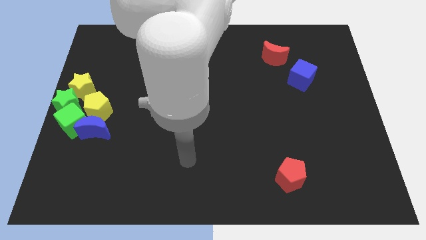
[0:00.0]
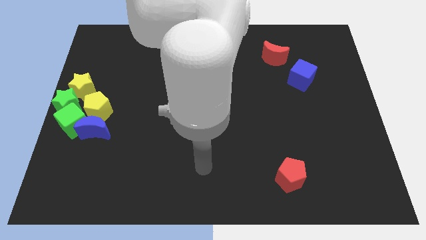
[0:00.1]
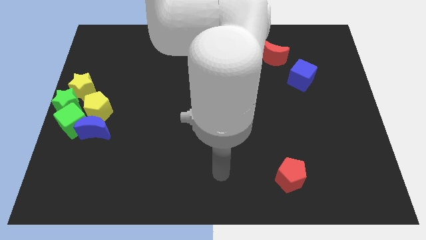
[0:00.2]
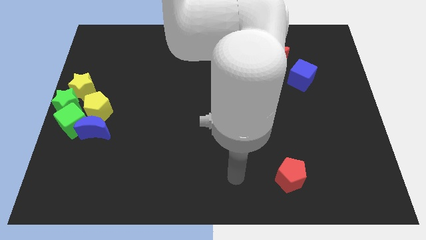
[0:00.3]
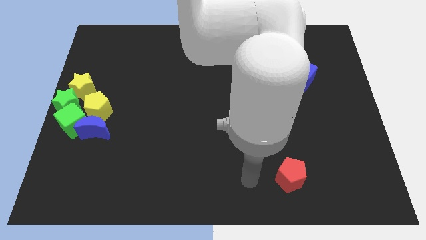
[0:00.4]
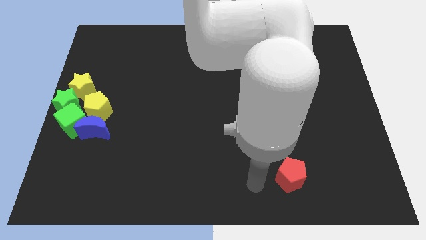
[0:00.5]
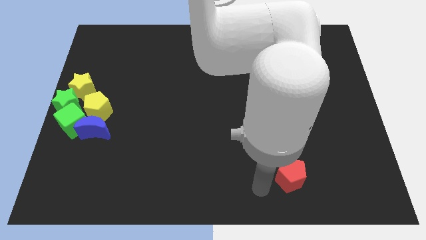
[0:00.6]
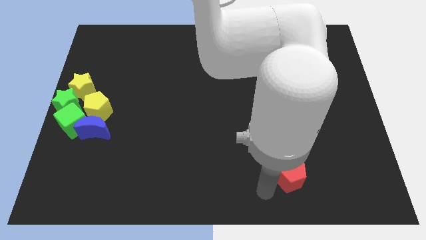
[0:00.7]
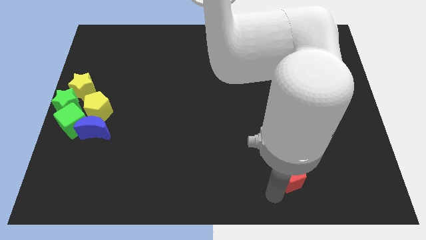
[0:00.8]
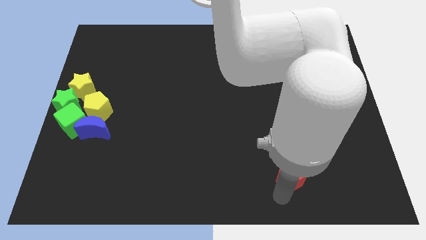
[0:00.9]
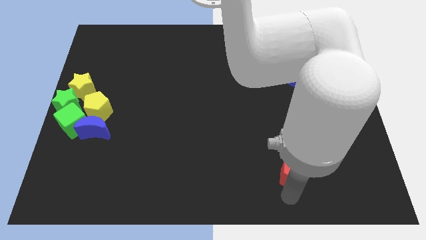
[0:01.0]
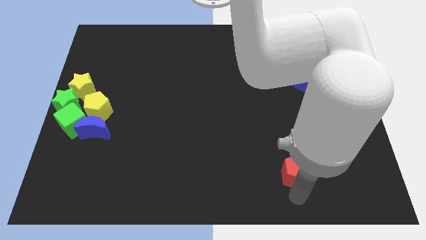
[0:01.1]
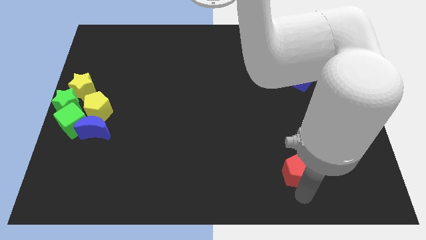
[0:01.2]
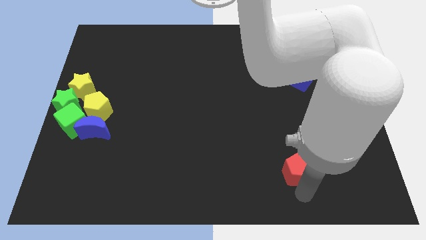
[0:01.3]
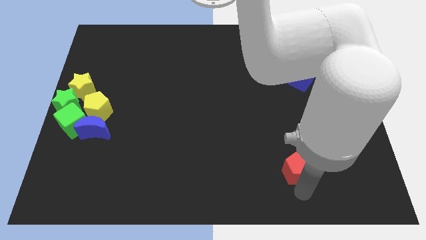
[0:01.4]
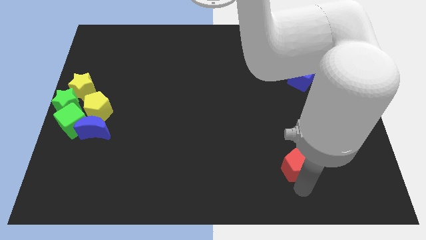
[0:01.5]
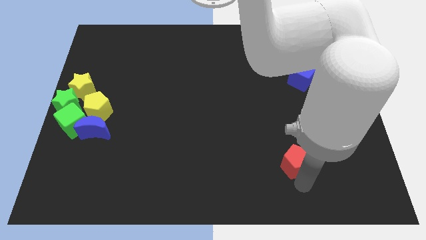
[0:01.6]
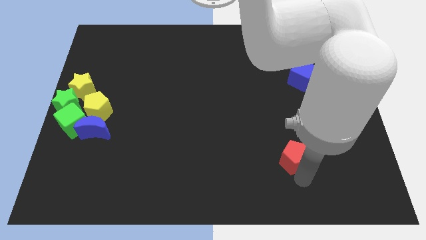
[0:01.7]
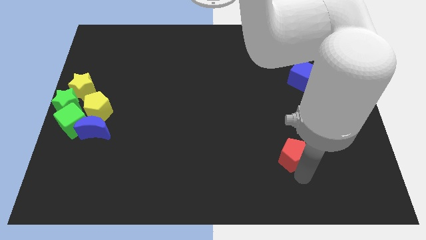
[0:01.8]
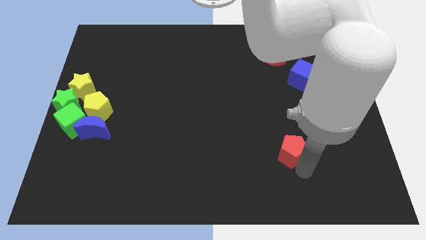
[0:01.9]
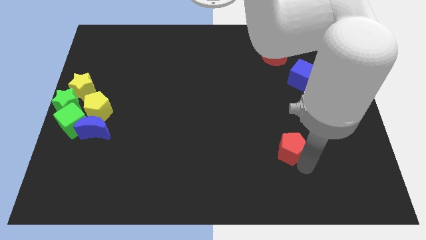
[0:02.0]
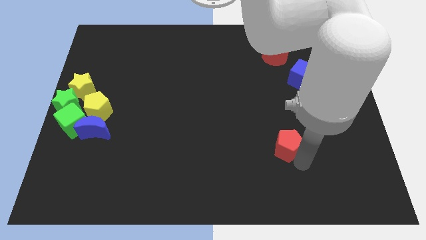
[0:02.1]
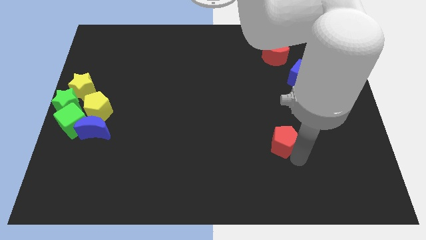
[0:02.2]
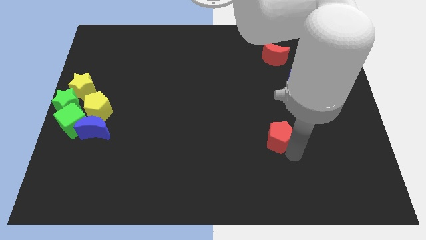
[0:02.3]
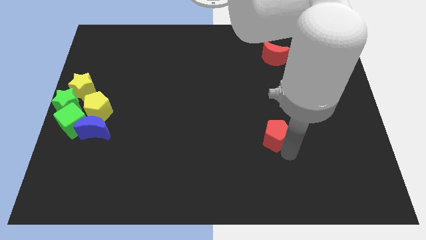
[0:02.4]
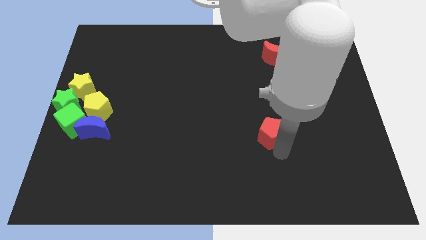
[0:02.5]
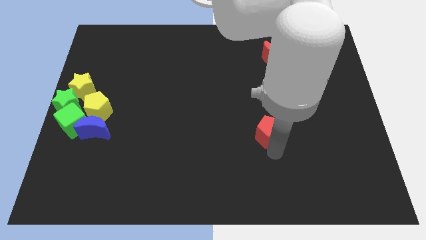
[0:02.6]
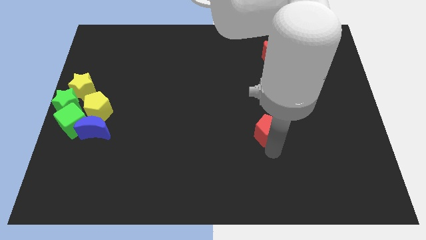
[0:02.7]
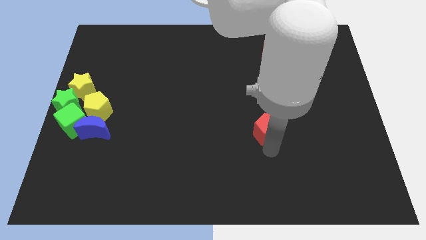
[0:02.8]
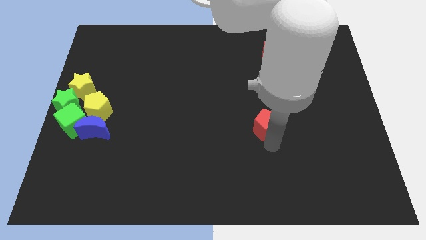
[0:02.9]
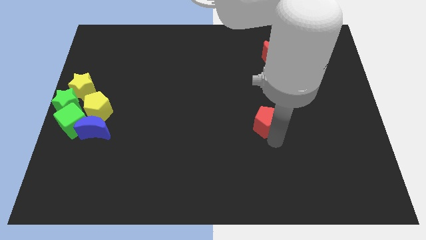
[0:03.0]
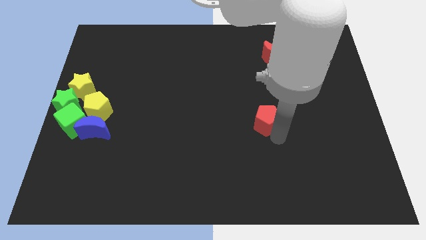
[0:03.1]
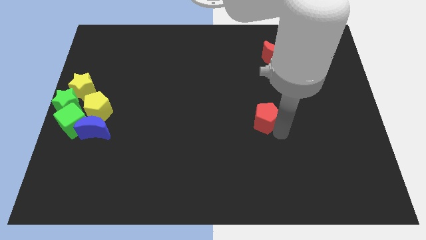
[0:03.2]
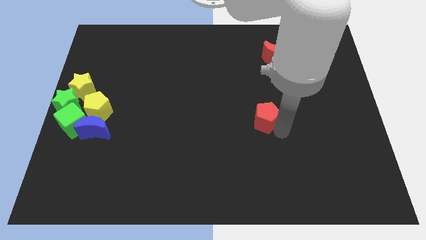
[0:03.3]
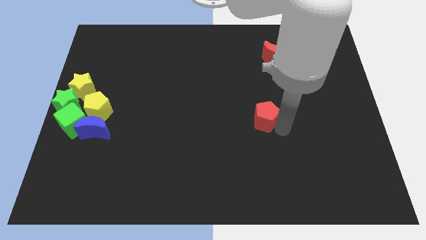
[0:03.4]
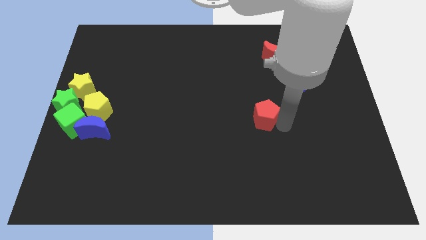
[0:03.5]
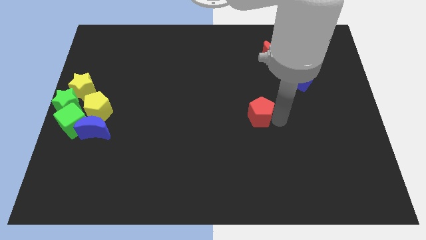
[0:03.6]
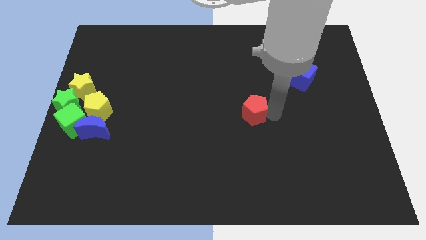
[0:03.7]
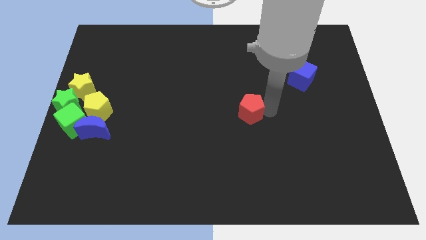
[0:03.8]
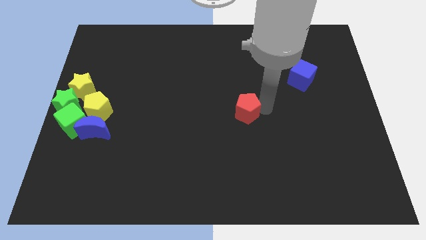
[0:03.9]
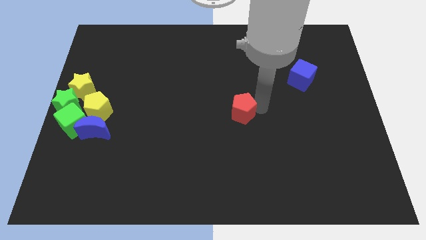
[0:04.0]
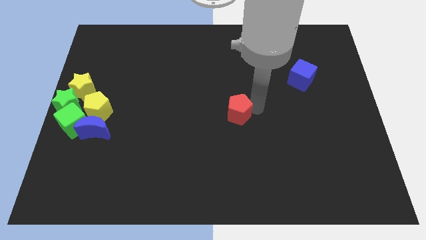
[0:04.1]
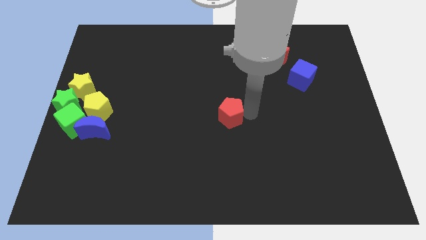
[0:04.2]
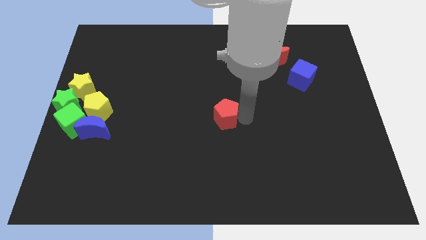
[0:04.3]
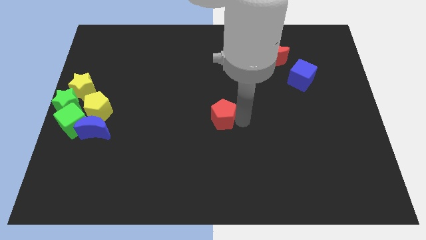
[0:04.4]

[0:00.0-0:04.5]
move the red pentagon towards the center of the board

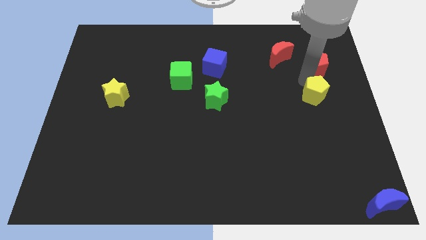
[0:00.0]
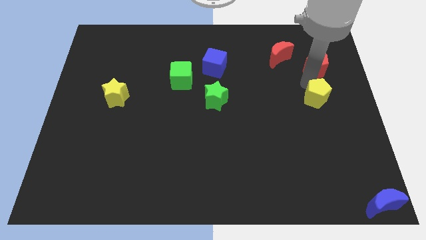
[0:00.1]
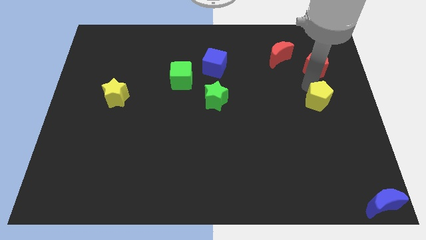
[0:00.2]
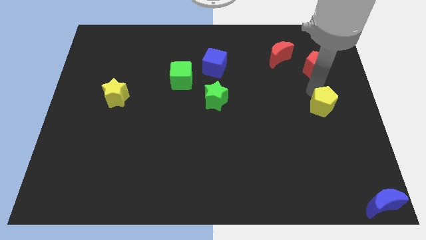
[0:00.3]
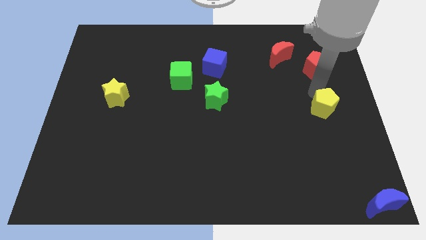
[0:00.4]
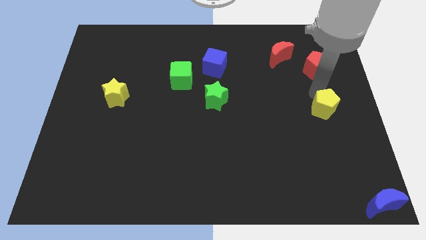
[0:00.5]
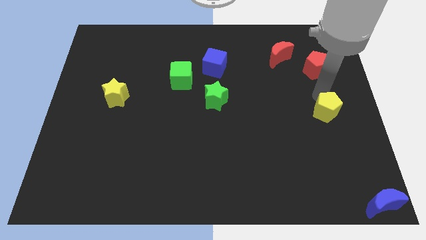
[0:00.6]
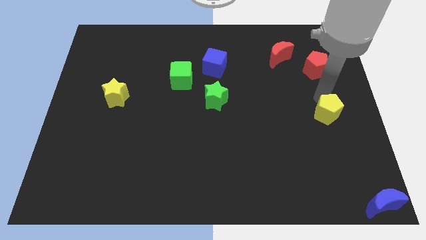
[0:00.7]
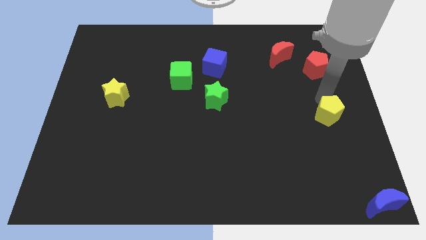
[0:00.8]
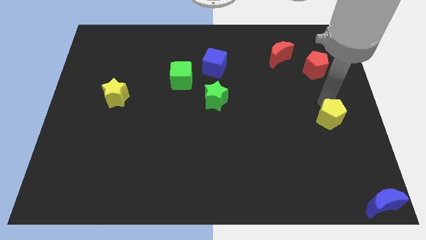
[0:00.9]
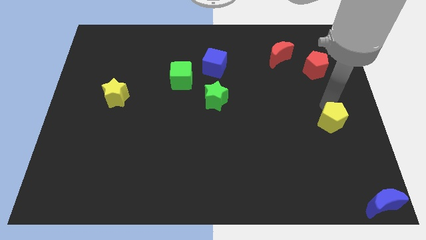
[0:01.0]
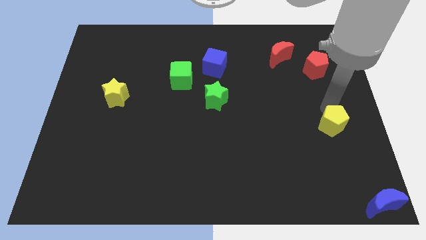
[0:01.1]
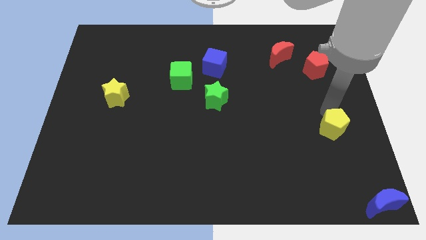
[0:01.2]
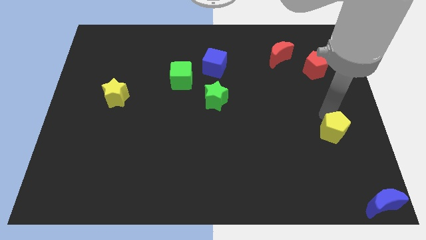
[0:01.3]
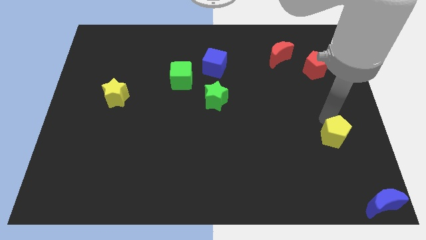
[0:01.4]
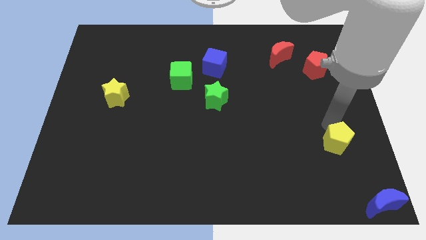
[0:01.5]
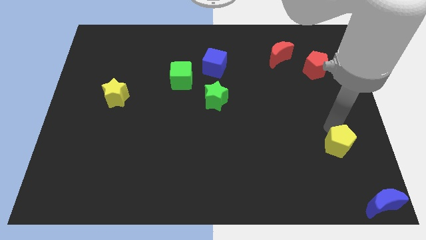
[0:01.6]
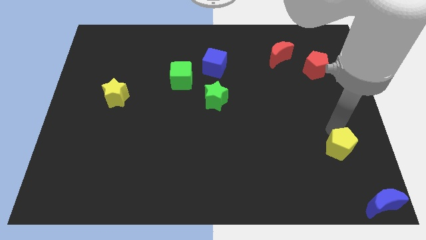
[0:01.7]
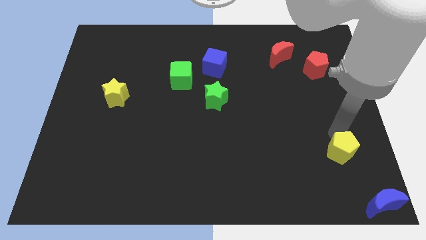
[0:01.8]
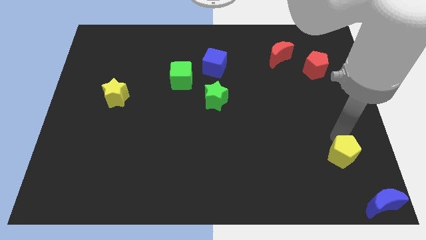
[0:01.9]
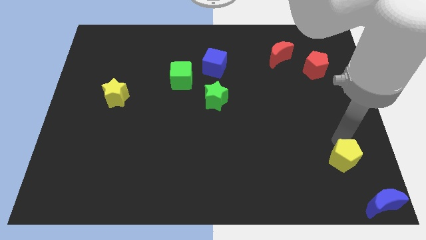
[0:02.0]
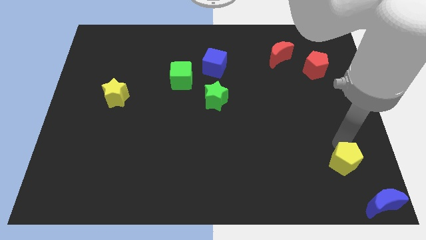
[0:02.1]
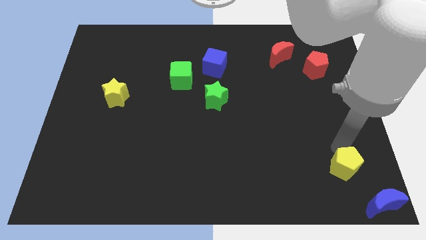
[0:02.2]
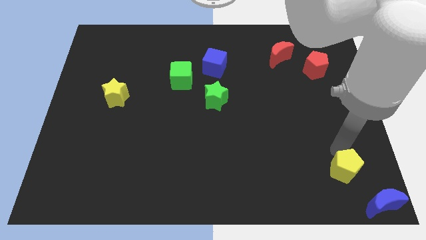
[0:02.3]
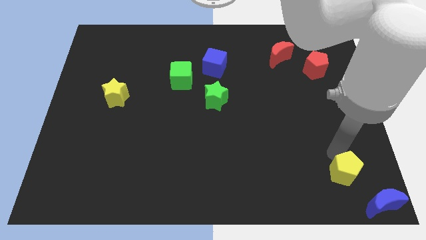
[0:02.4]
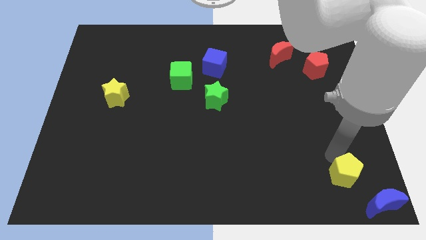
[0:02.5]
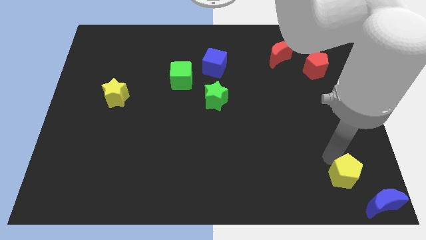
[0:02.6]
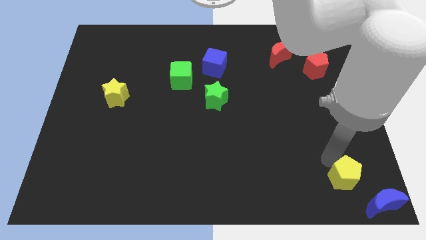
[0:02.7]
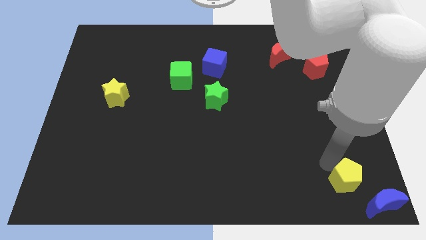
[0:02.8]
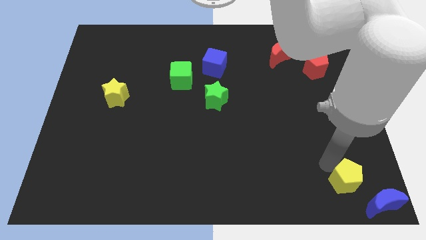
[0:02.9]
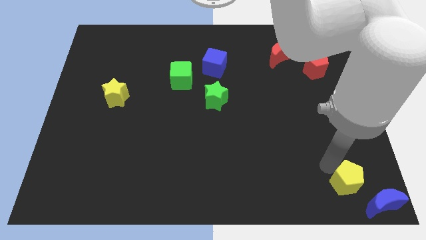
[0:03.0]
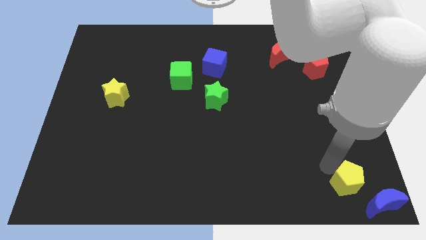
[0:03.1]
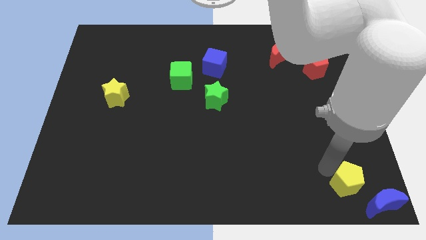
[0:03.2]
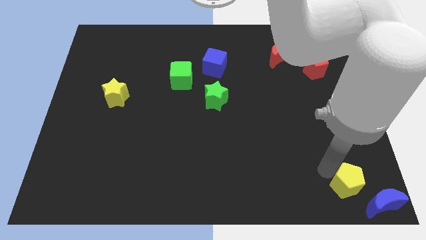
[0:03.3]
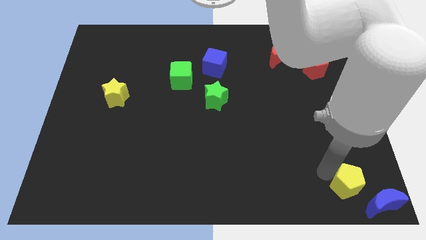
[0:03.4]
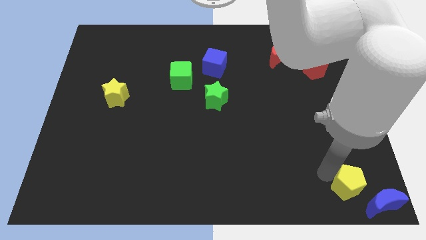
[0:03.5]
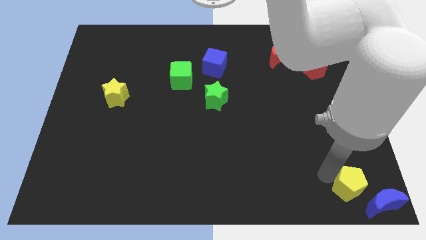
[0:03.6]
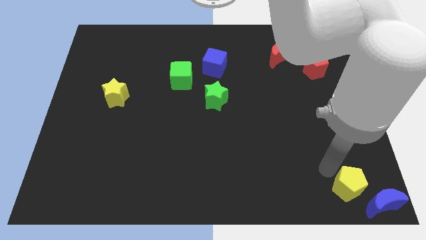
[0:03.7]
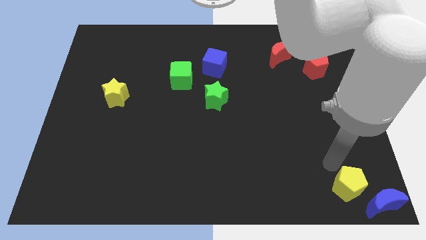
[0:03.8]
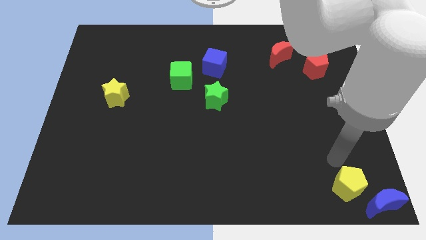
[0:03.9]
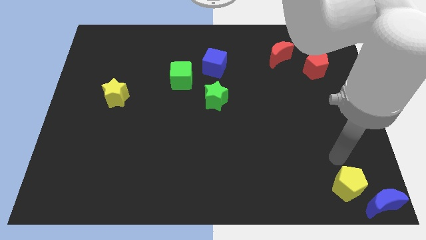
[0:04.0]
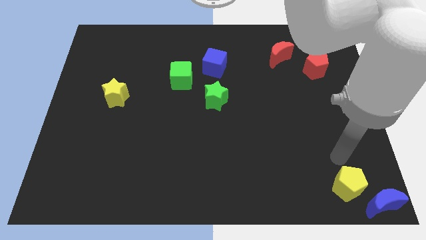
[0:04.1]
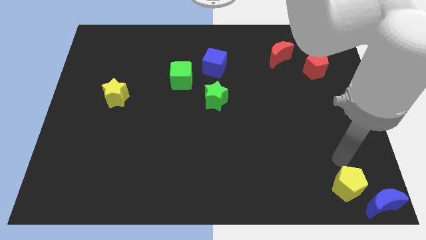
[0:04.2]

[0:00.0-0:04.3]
move the yellow pentagon near to the blue crescent

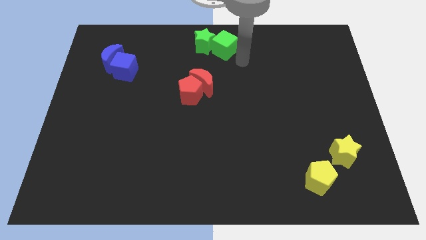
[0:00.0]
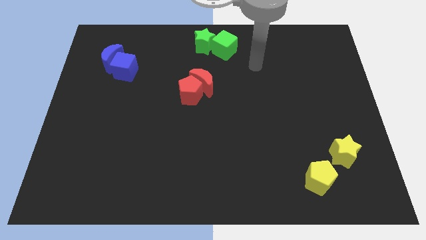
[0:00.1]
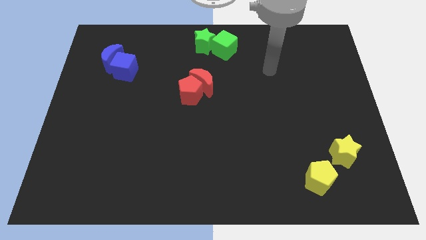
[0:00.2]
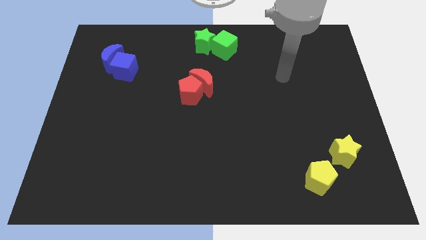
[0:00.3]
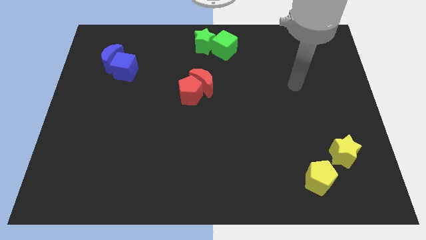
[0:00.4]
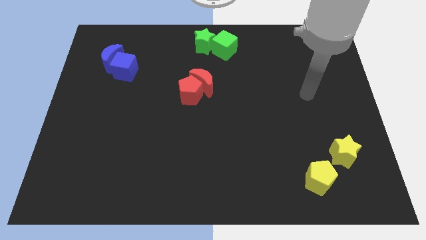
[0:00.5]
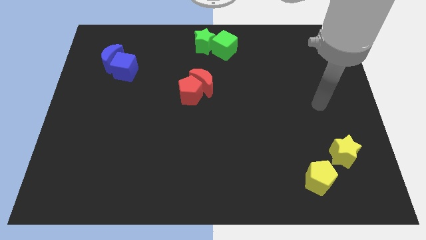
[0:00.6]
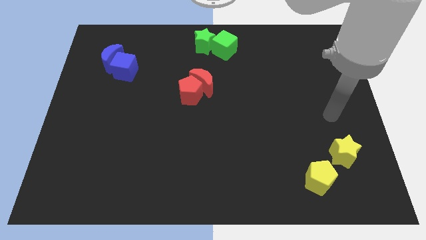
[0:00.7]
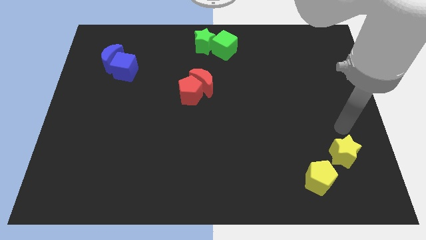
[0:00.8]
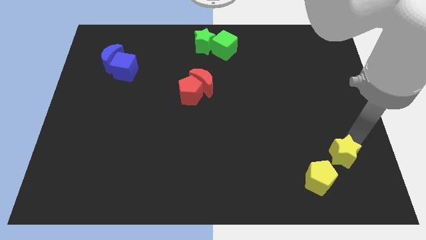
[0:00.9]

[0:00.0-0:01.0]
point the arm above the yellow star
